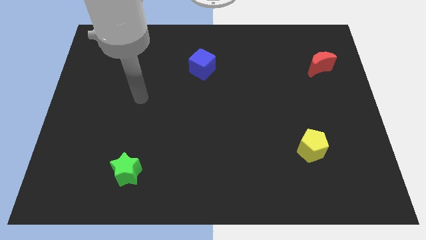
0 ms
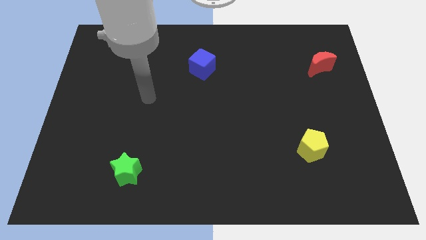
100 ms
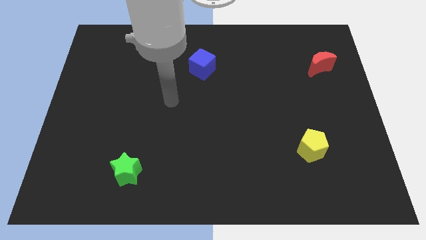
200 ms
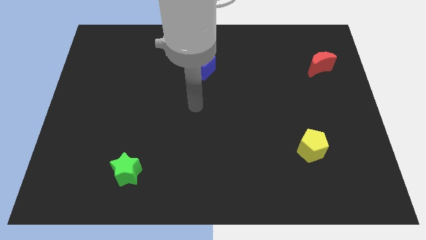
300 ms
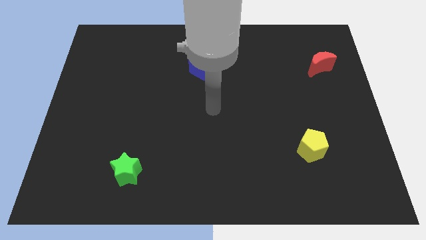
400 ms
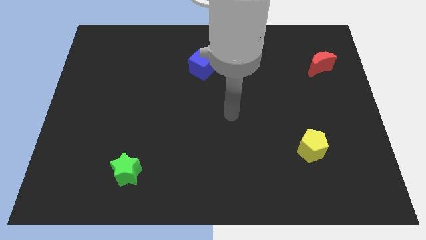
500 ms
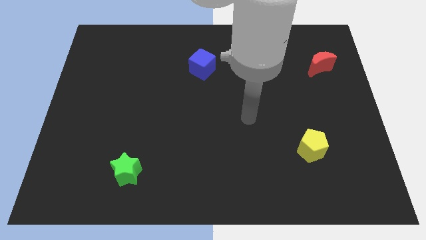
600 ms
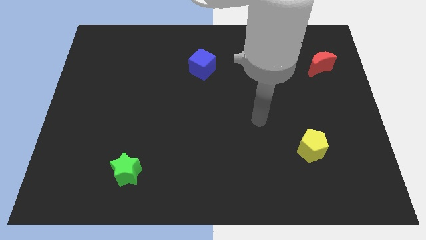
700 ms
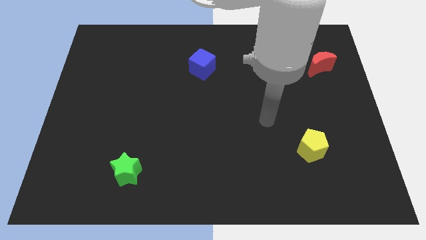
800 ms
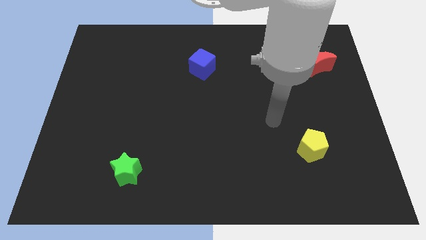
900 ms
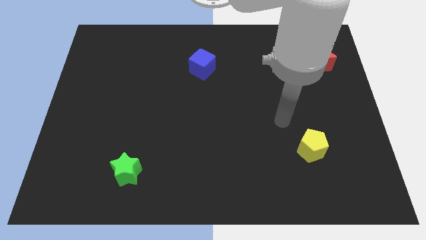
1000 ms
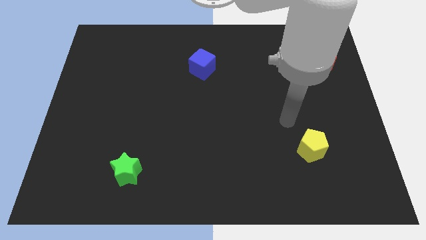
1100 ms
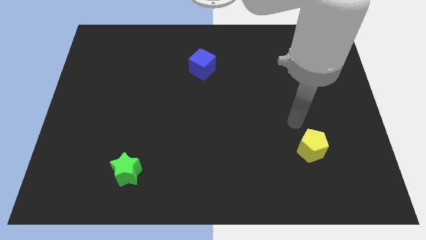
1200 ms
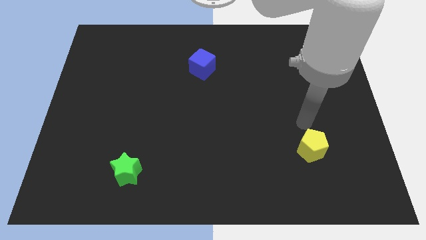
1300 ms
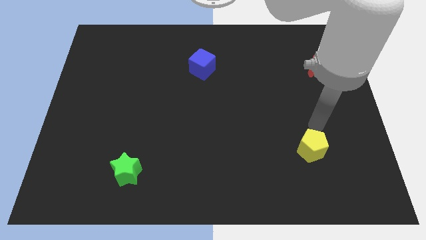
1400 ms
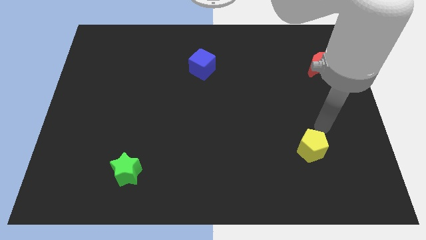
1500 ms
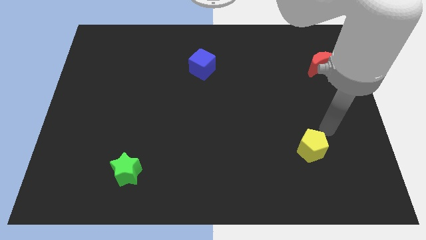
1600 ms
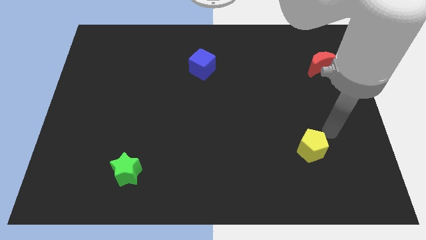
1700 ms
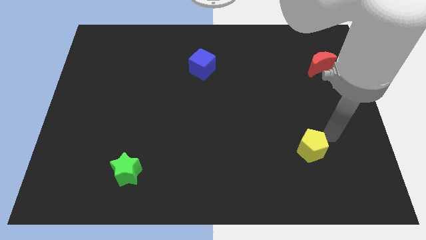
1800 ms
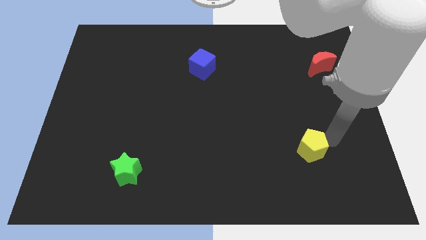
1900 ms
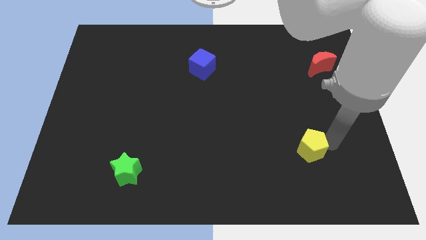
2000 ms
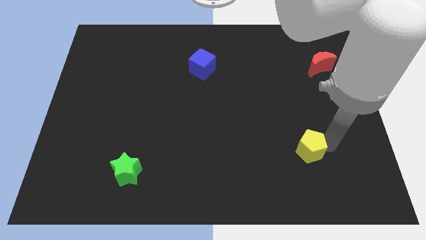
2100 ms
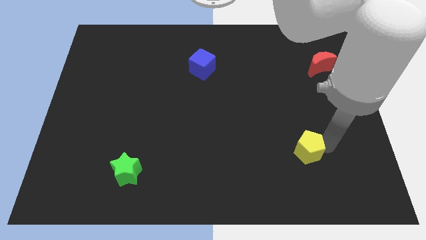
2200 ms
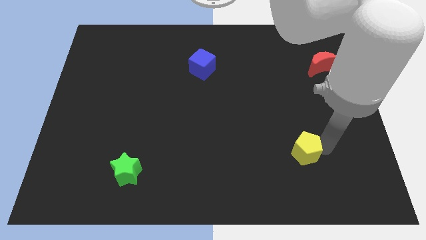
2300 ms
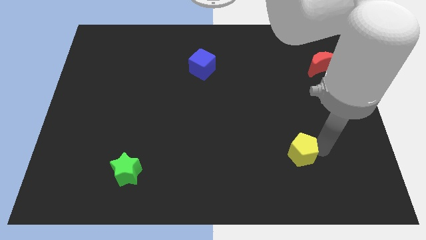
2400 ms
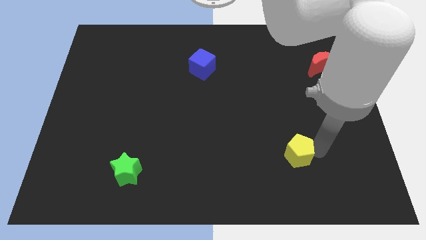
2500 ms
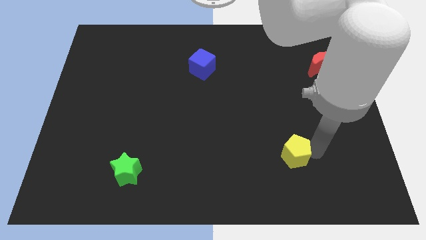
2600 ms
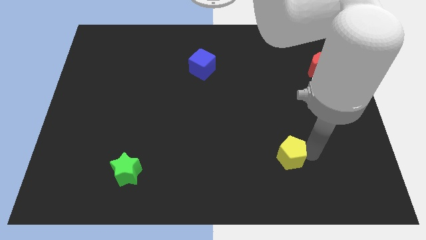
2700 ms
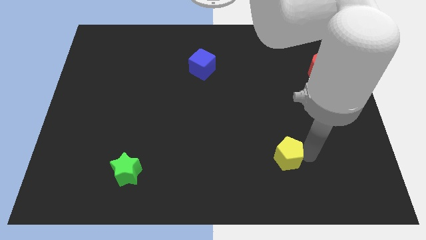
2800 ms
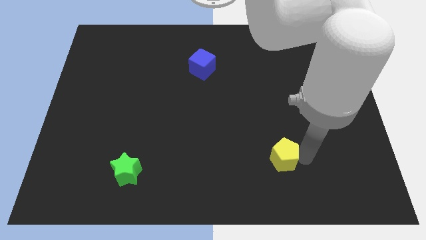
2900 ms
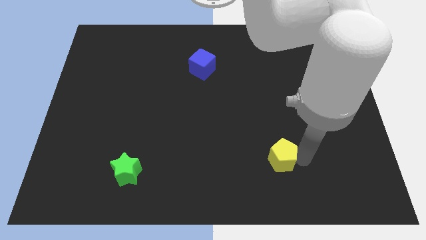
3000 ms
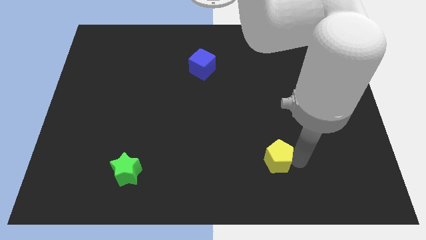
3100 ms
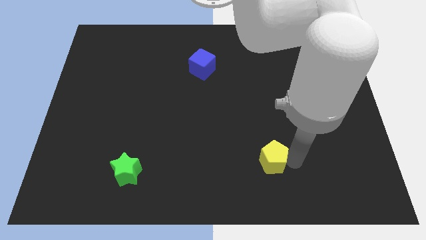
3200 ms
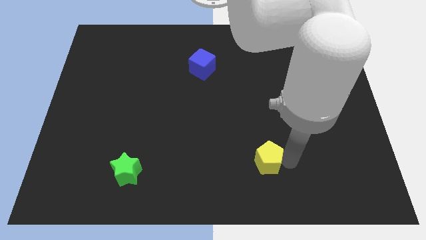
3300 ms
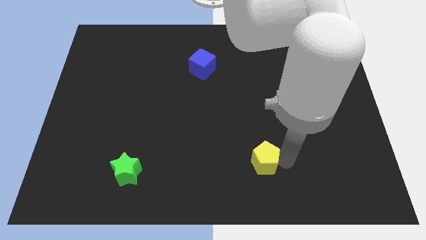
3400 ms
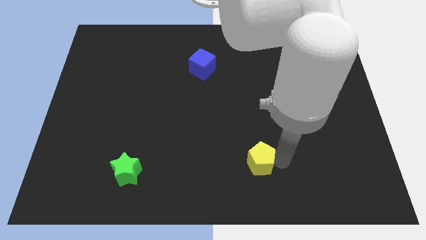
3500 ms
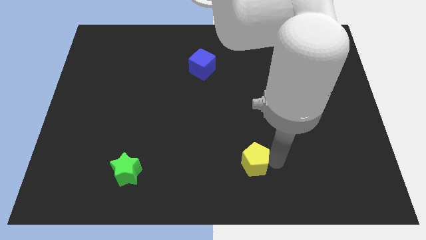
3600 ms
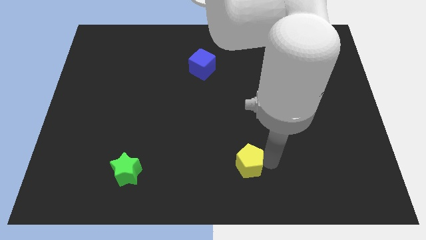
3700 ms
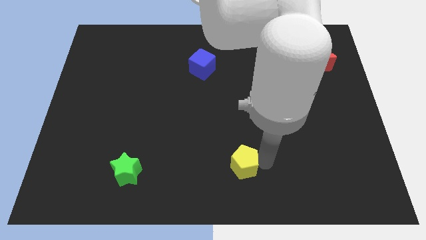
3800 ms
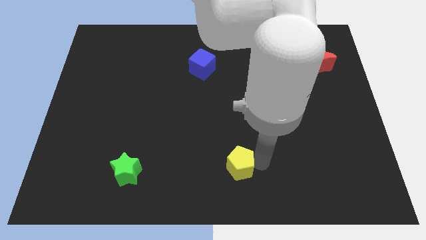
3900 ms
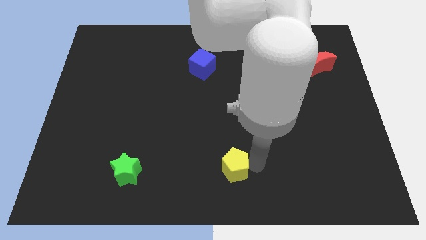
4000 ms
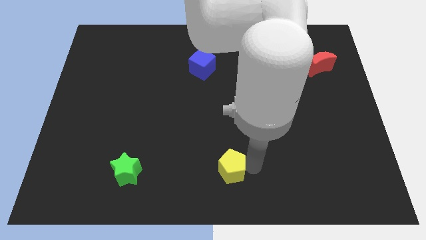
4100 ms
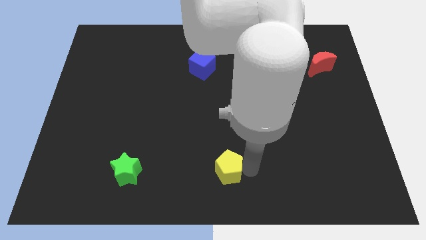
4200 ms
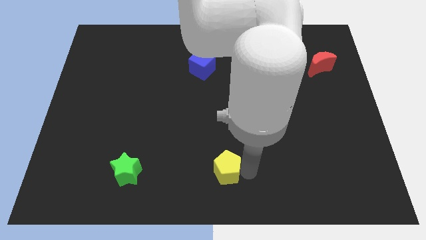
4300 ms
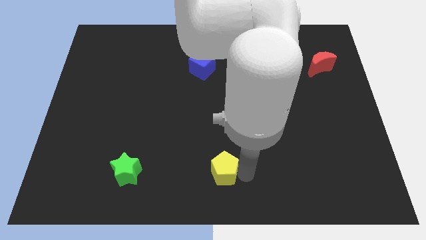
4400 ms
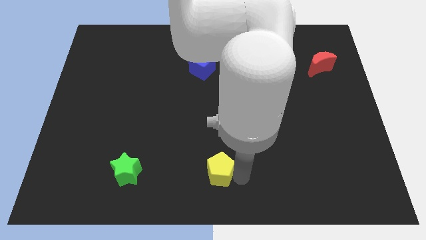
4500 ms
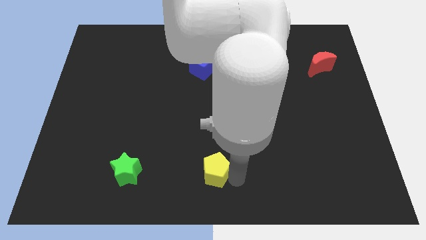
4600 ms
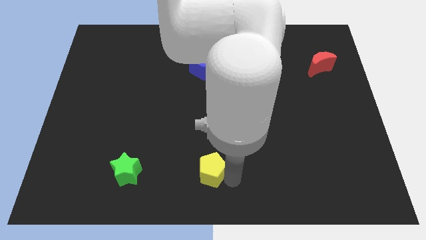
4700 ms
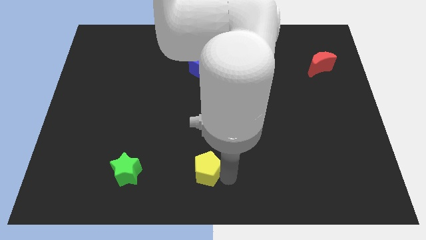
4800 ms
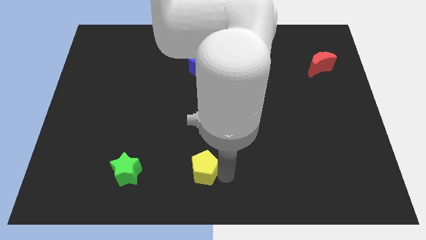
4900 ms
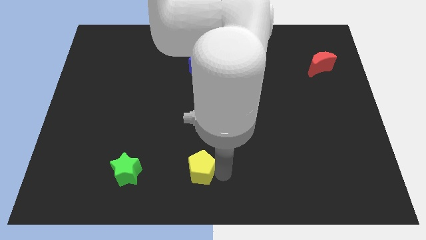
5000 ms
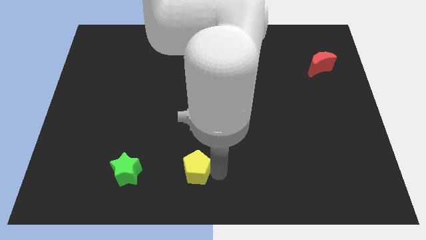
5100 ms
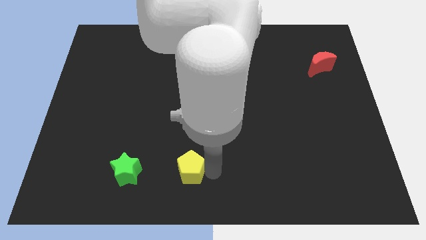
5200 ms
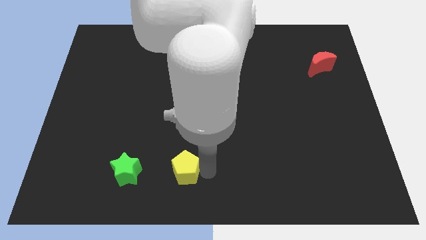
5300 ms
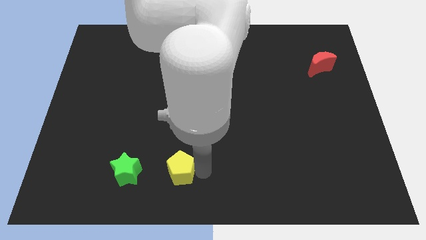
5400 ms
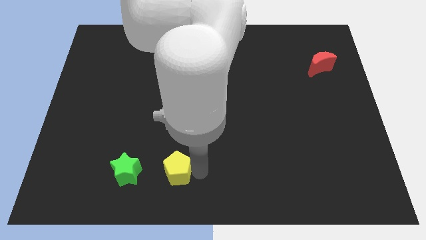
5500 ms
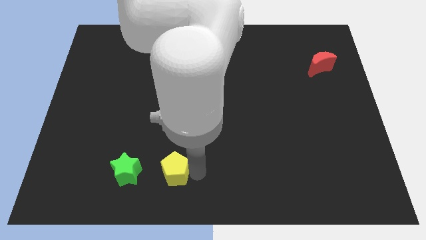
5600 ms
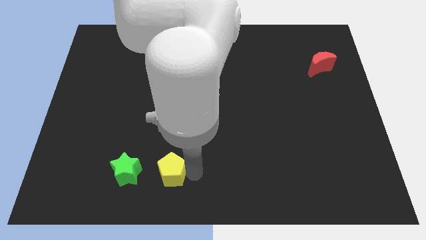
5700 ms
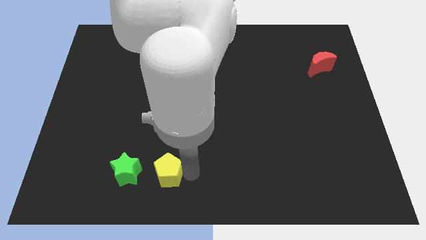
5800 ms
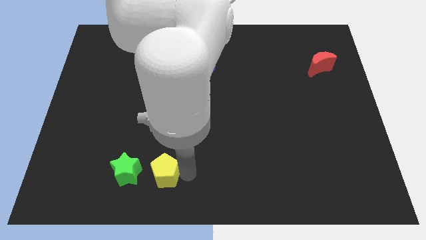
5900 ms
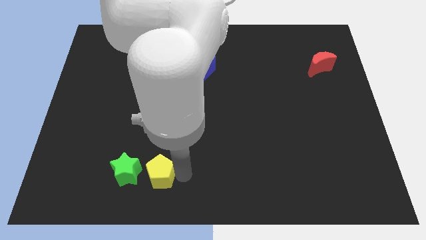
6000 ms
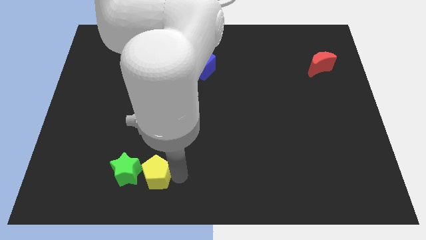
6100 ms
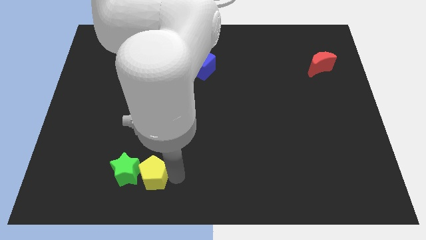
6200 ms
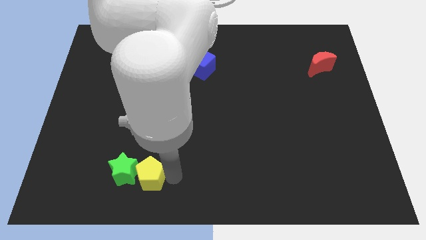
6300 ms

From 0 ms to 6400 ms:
move the yellow block towards the green star

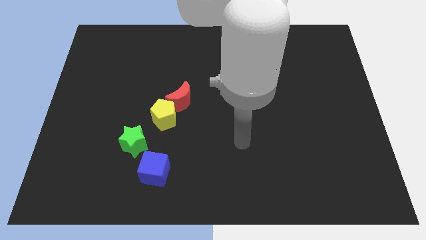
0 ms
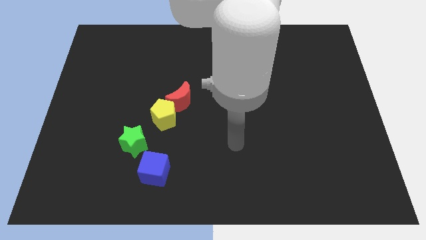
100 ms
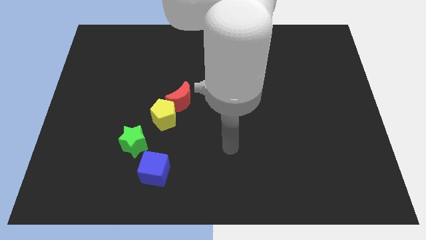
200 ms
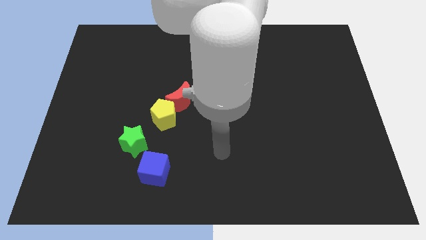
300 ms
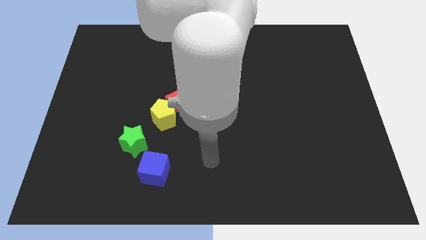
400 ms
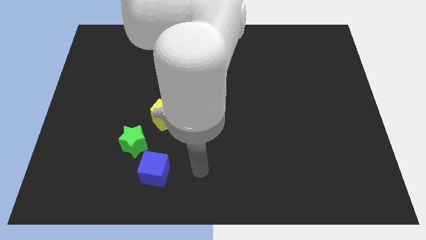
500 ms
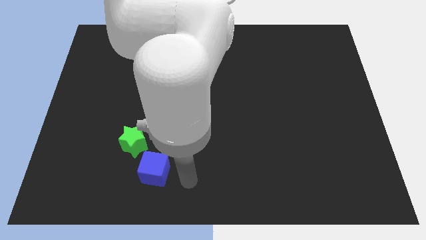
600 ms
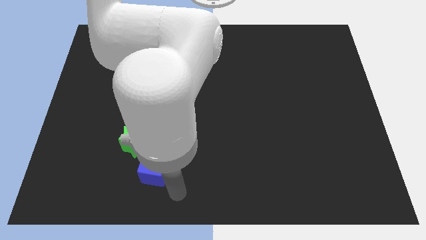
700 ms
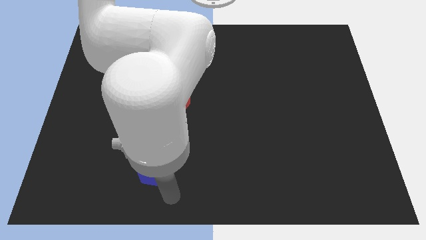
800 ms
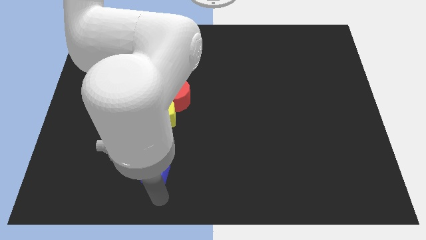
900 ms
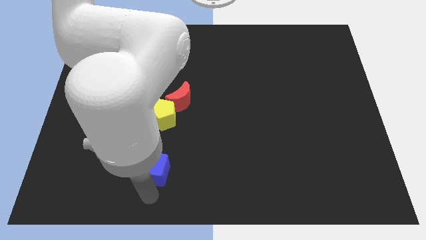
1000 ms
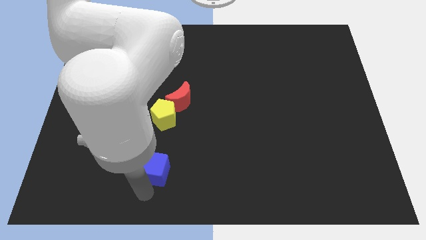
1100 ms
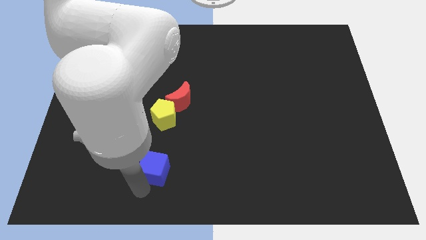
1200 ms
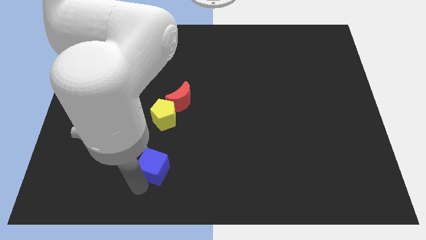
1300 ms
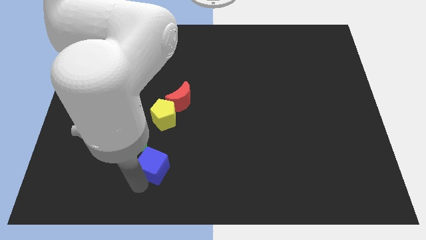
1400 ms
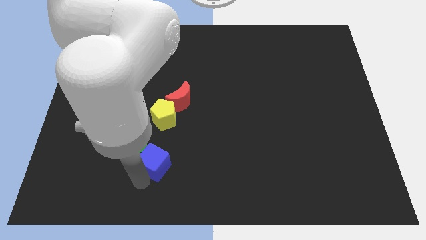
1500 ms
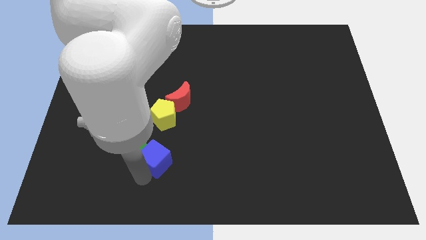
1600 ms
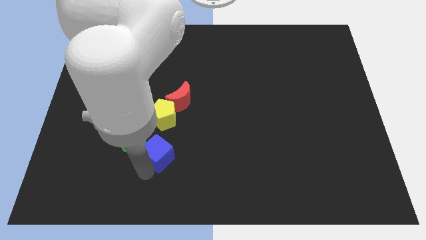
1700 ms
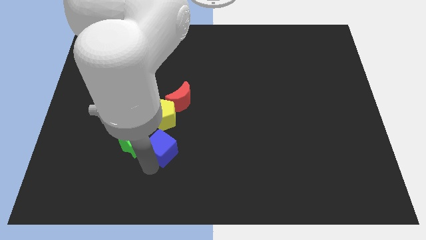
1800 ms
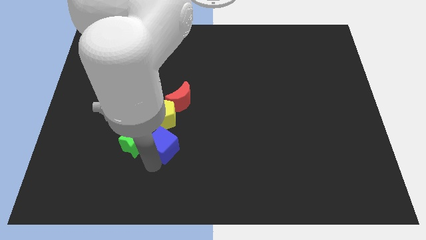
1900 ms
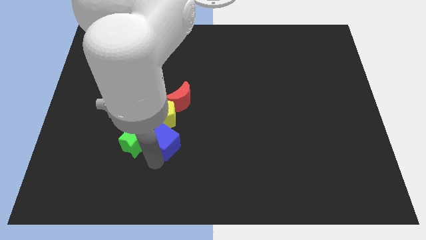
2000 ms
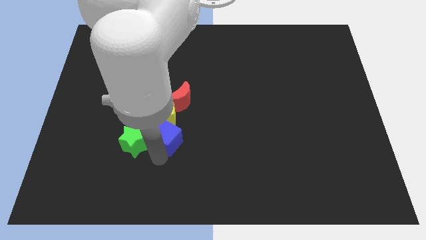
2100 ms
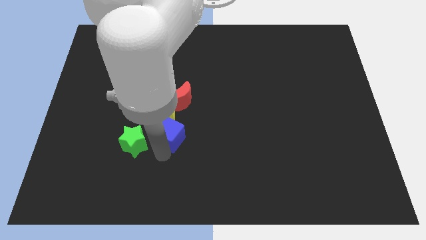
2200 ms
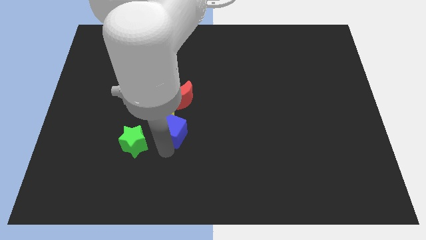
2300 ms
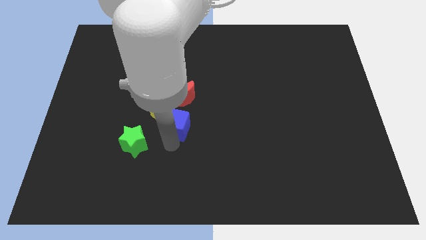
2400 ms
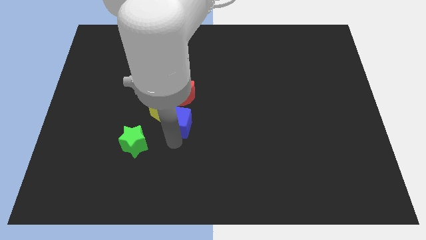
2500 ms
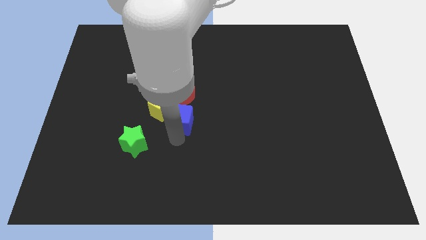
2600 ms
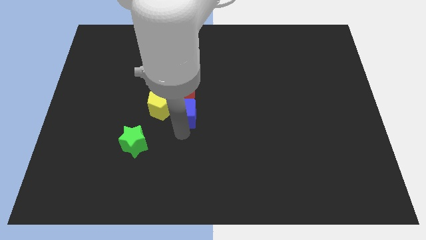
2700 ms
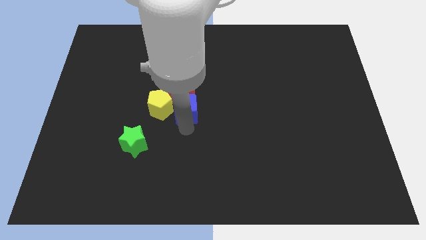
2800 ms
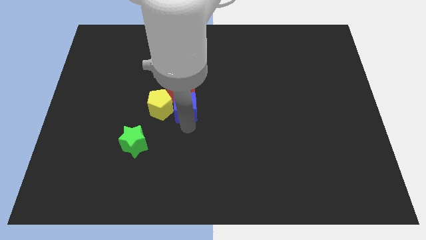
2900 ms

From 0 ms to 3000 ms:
slide the blue cube close to the moon
